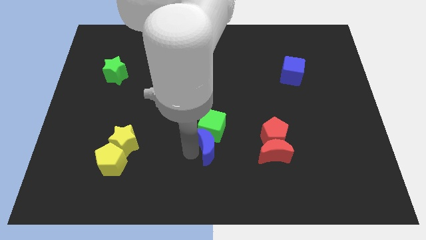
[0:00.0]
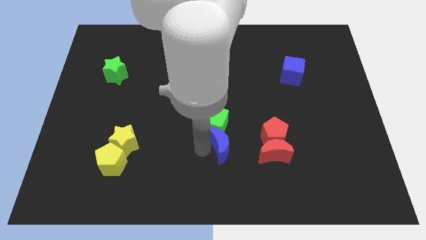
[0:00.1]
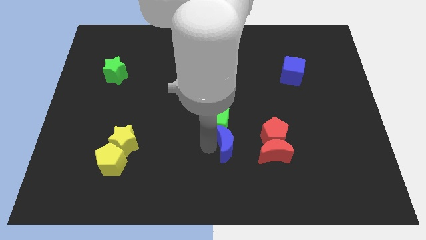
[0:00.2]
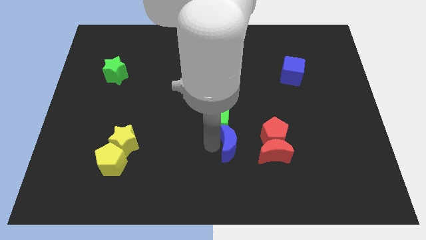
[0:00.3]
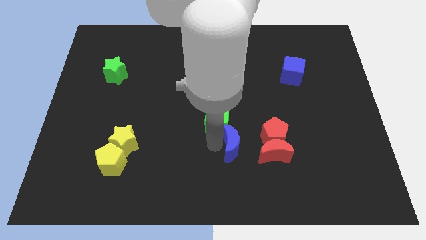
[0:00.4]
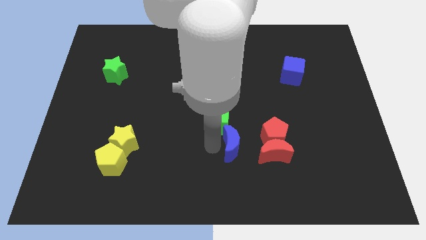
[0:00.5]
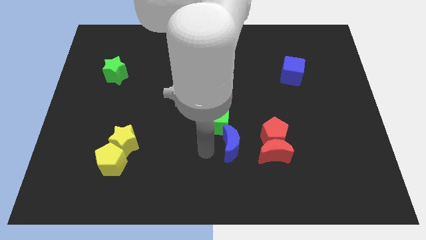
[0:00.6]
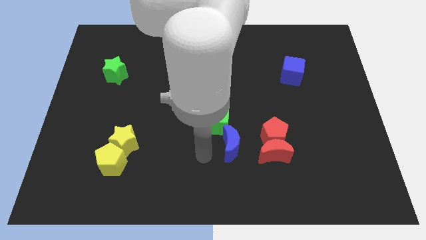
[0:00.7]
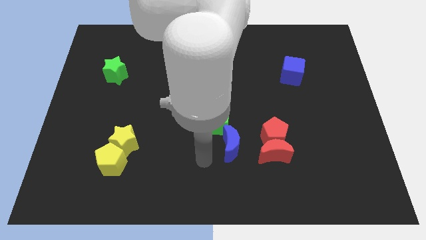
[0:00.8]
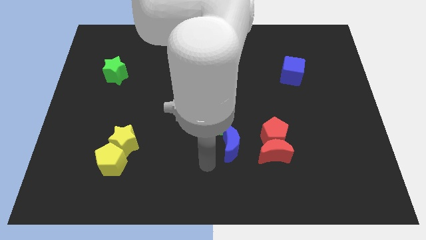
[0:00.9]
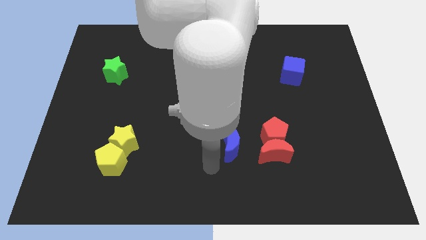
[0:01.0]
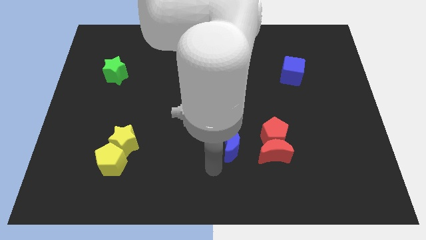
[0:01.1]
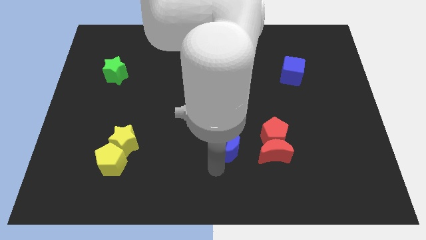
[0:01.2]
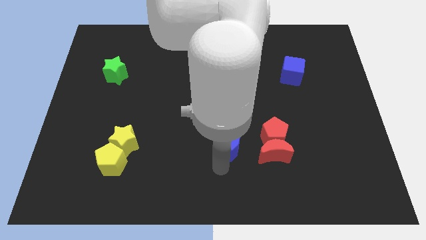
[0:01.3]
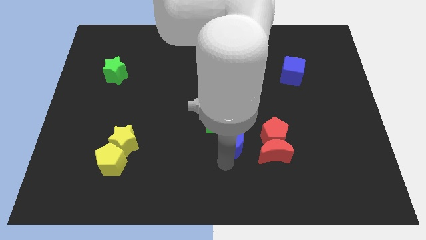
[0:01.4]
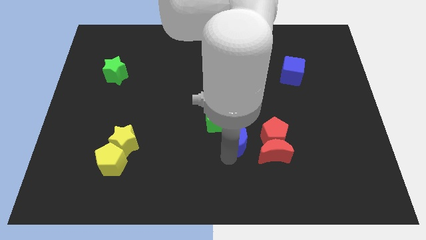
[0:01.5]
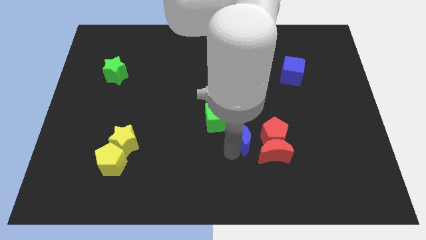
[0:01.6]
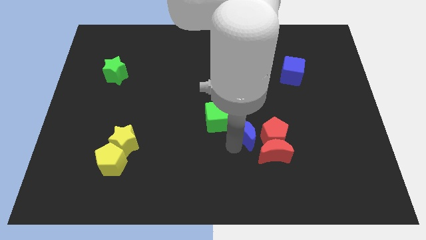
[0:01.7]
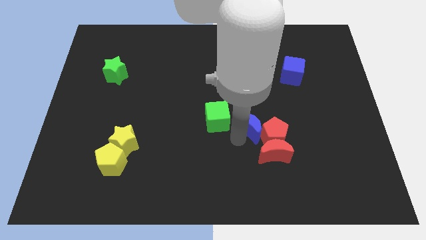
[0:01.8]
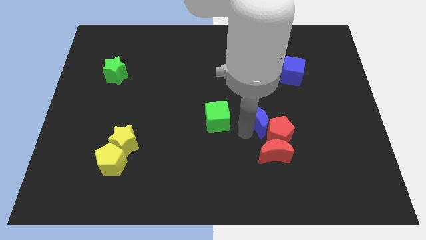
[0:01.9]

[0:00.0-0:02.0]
drag the blue crescent towards the left side of red pentagon

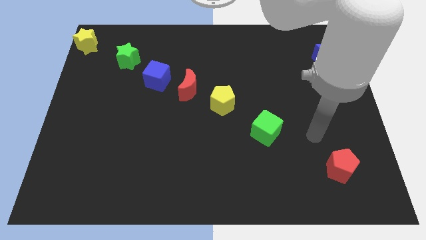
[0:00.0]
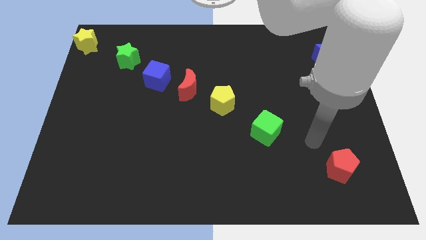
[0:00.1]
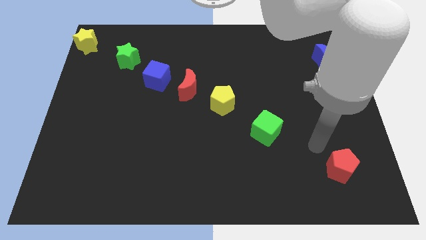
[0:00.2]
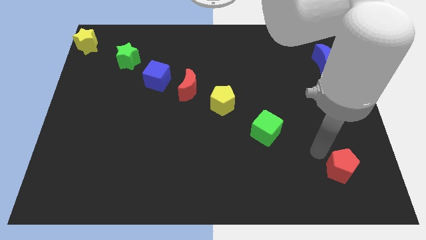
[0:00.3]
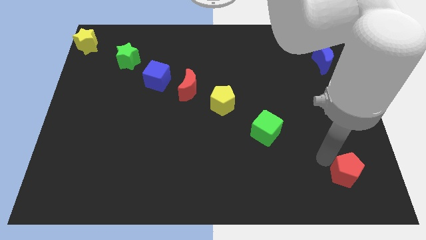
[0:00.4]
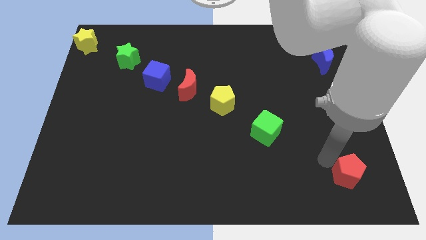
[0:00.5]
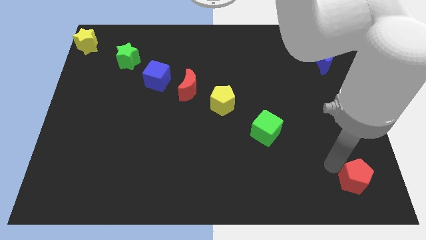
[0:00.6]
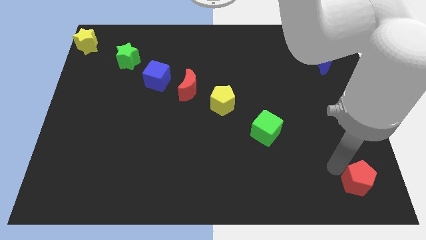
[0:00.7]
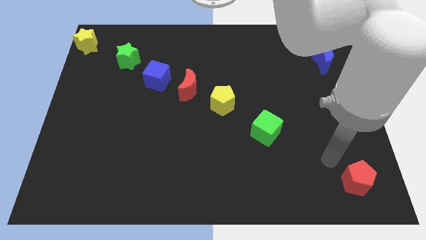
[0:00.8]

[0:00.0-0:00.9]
push red pentagon slightly below

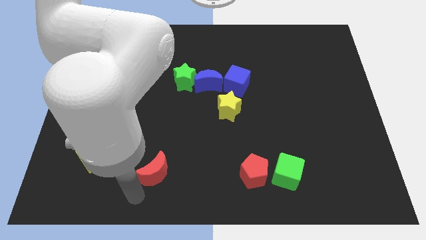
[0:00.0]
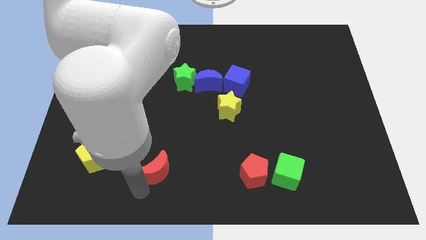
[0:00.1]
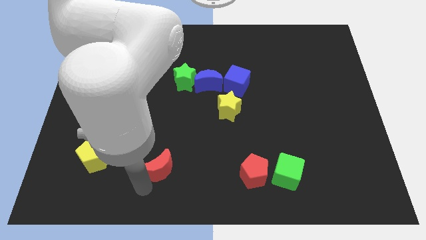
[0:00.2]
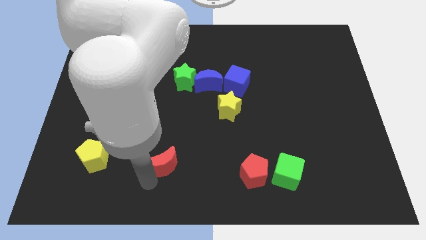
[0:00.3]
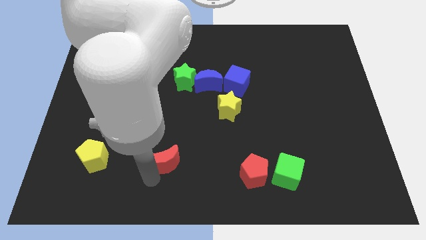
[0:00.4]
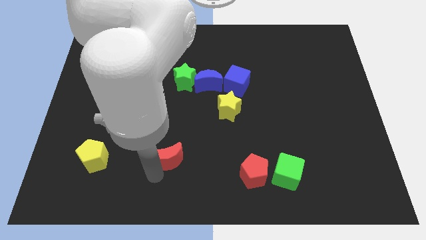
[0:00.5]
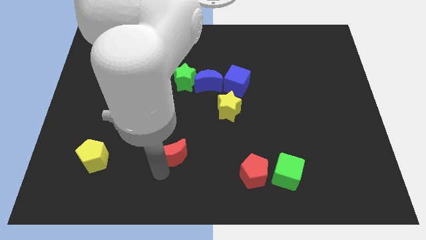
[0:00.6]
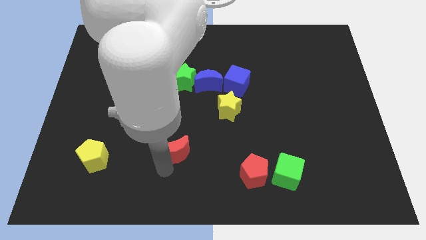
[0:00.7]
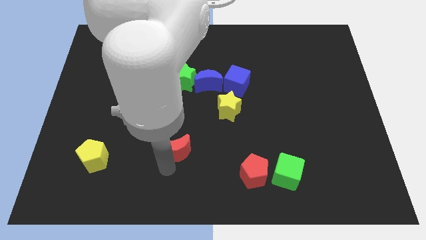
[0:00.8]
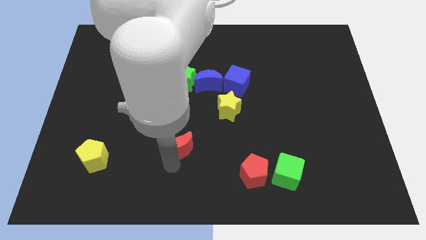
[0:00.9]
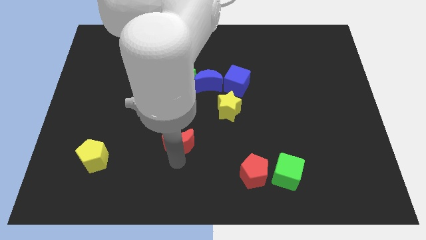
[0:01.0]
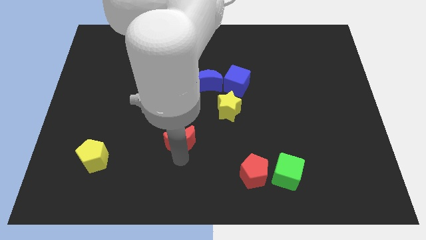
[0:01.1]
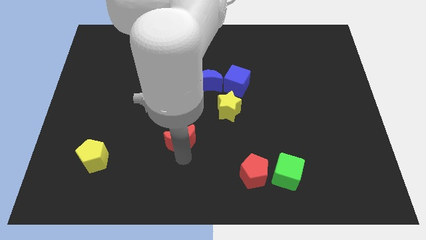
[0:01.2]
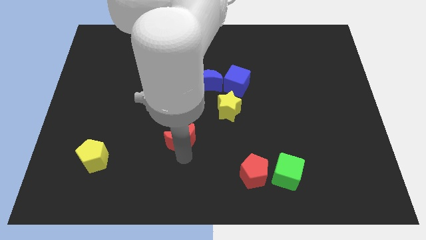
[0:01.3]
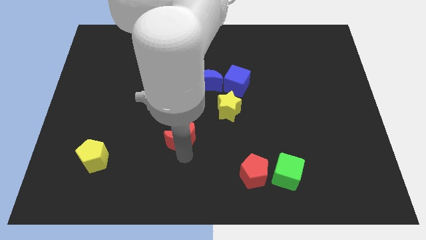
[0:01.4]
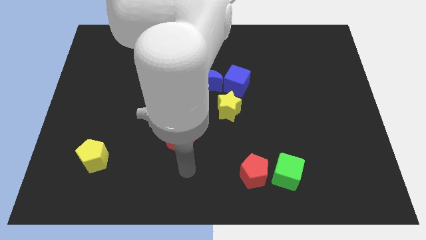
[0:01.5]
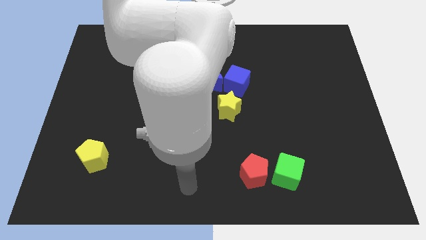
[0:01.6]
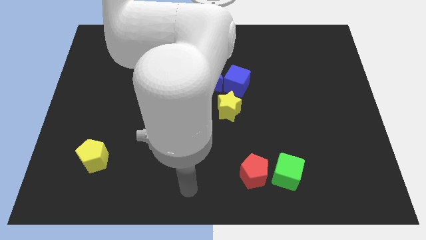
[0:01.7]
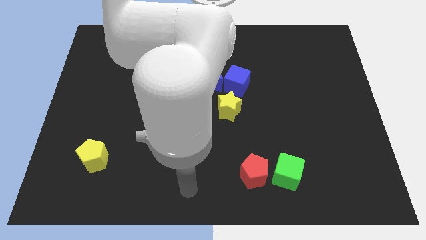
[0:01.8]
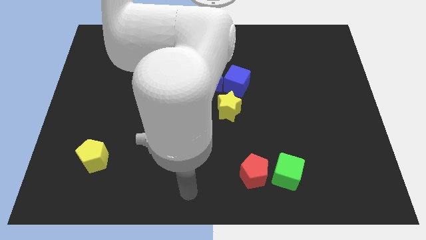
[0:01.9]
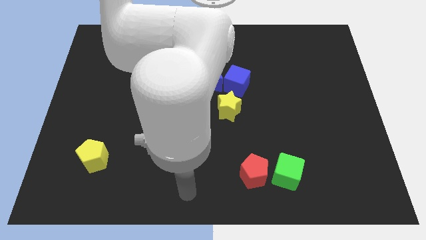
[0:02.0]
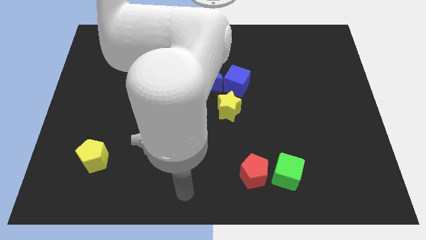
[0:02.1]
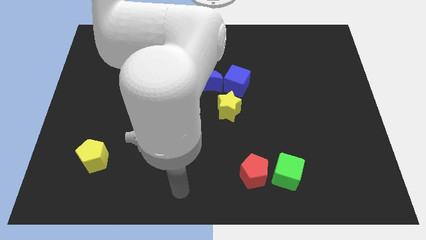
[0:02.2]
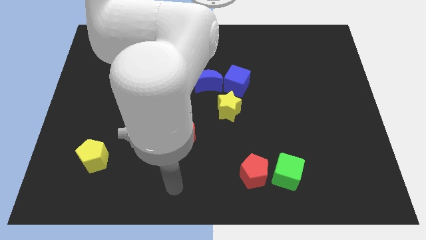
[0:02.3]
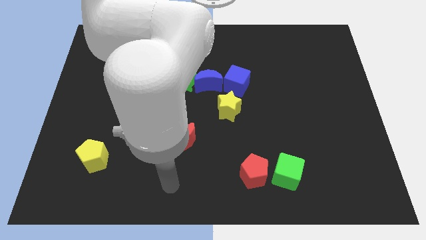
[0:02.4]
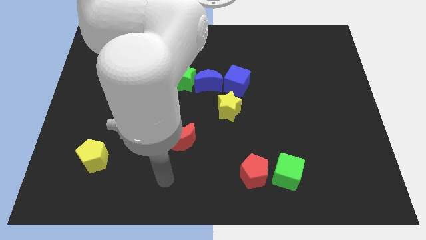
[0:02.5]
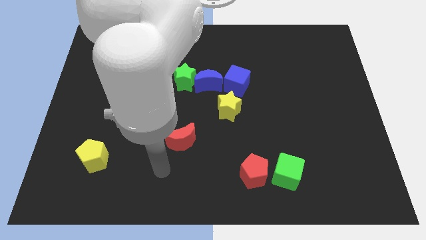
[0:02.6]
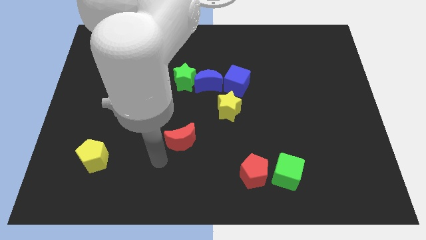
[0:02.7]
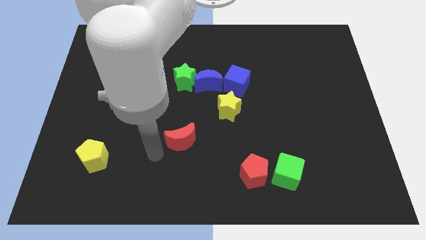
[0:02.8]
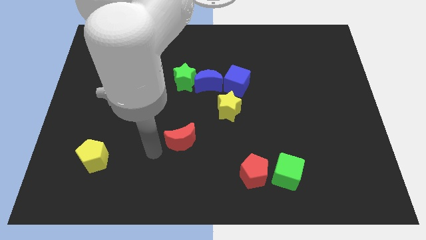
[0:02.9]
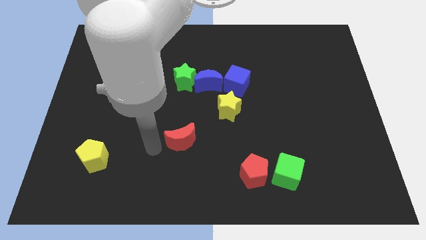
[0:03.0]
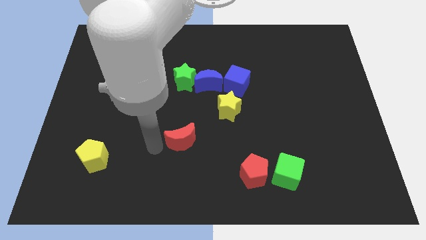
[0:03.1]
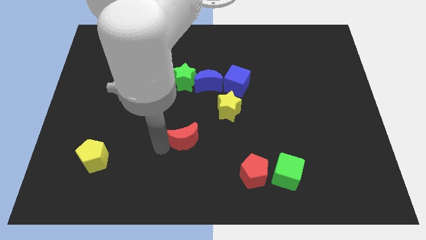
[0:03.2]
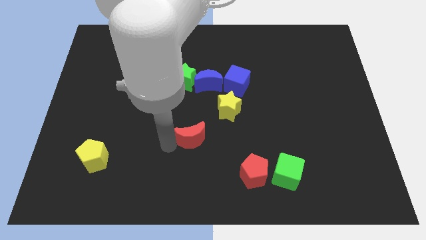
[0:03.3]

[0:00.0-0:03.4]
push red crescent below green star

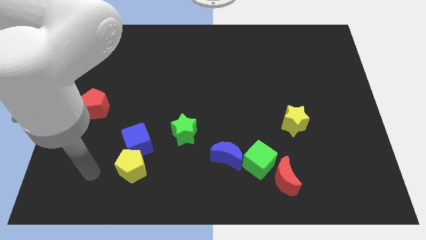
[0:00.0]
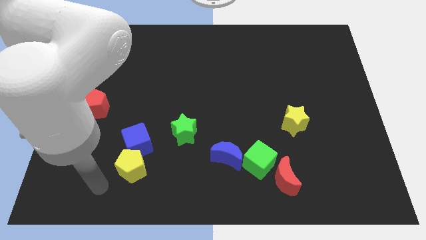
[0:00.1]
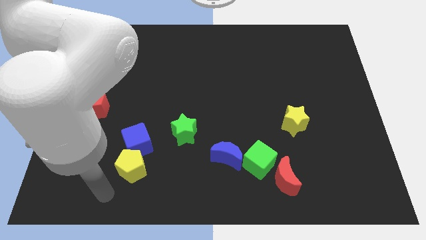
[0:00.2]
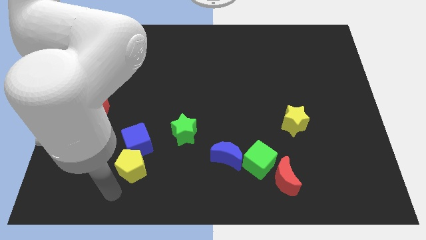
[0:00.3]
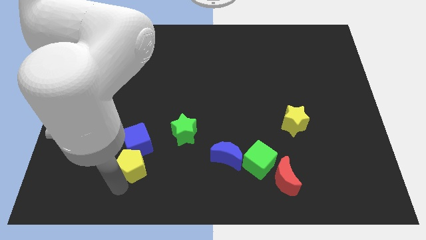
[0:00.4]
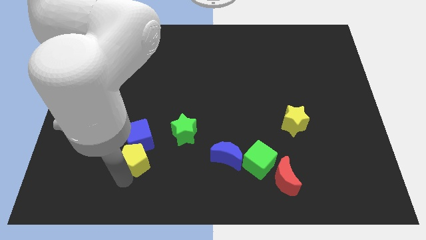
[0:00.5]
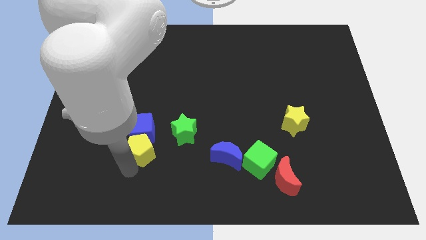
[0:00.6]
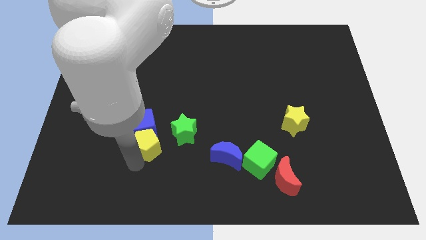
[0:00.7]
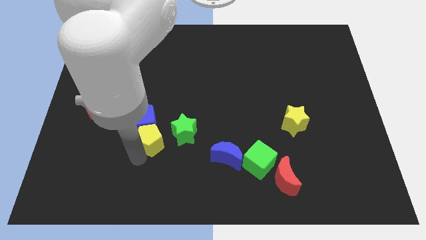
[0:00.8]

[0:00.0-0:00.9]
move the yellow pentagon along with blue cube upwards

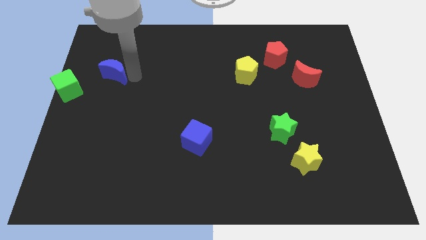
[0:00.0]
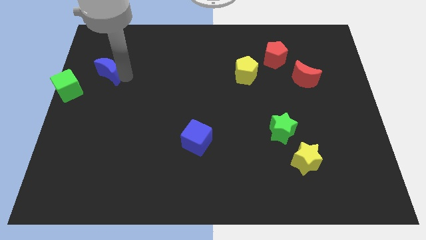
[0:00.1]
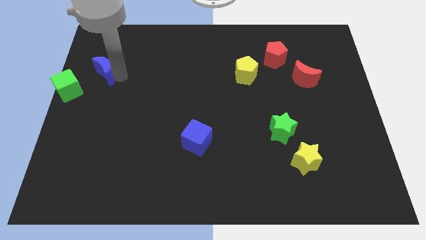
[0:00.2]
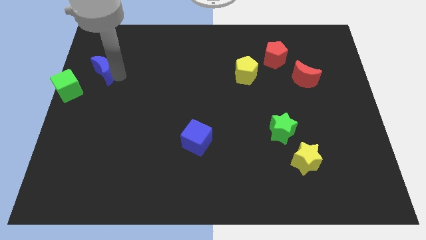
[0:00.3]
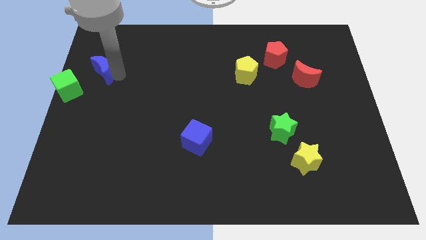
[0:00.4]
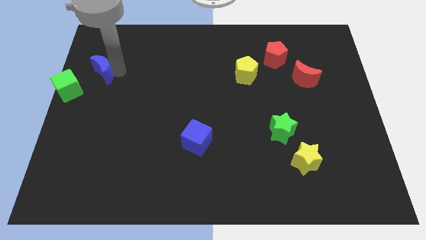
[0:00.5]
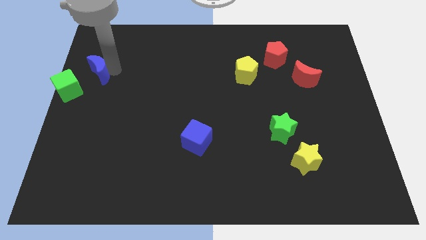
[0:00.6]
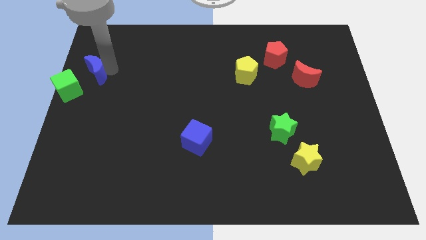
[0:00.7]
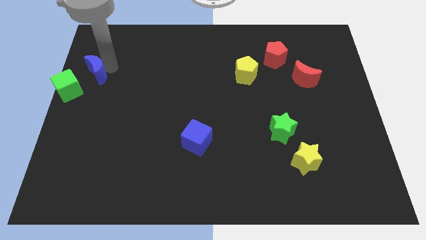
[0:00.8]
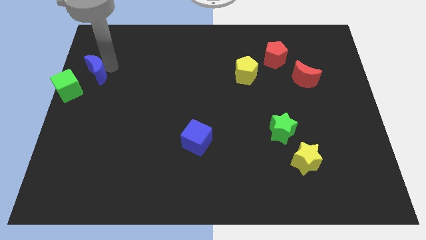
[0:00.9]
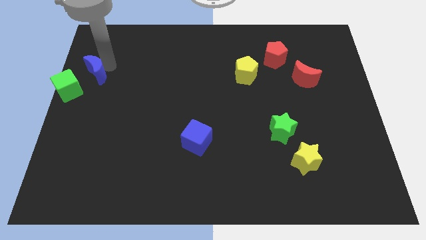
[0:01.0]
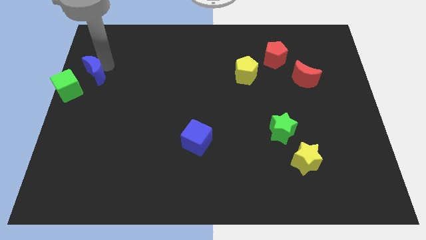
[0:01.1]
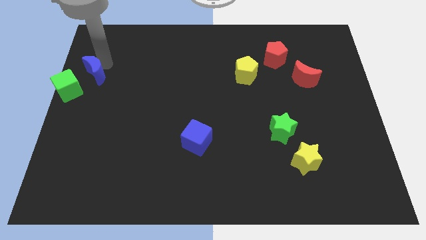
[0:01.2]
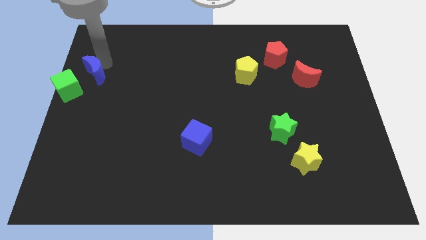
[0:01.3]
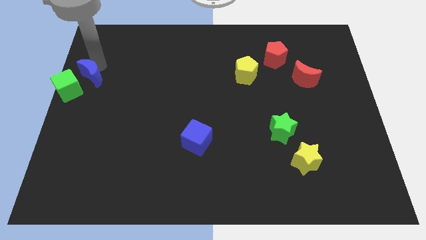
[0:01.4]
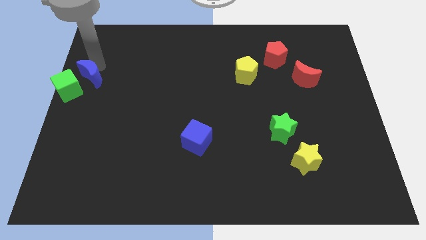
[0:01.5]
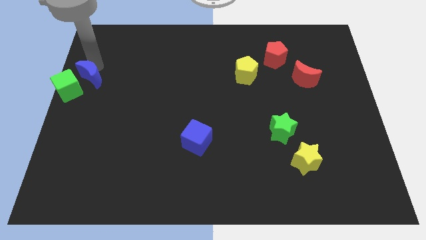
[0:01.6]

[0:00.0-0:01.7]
move blue crescent slightly towards the green cube
